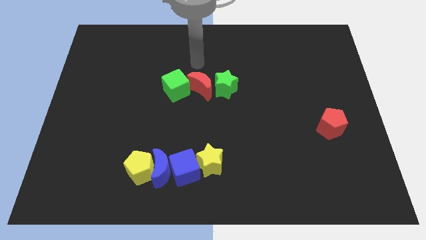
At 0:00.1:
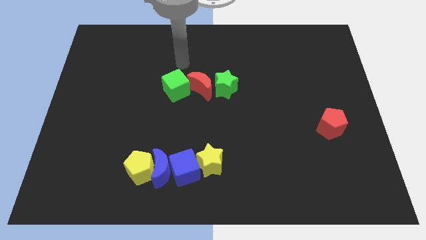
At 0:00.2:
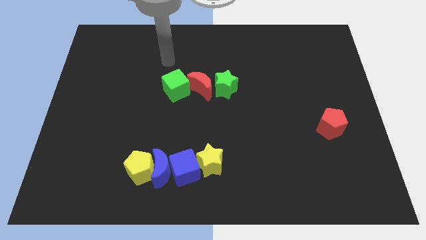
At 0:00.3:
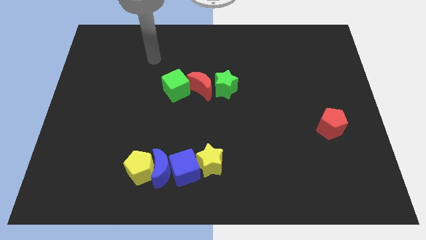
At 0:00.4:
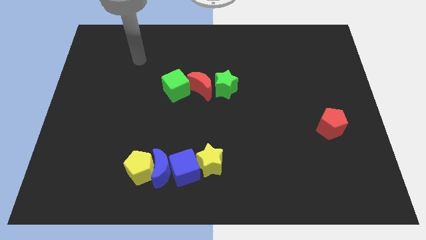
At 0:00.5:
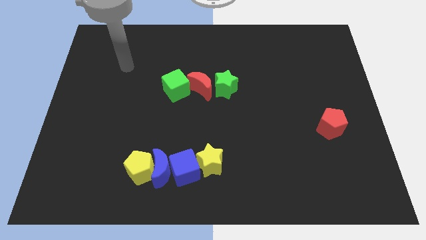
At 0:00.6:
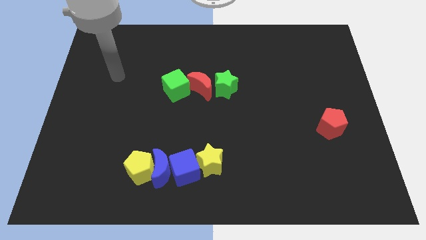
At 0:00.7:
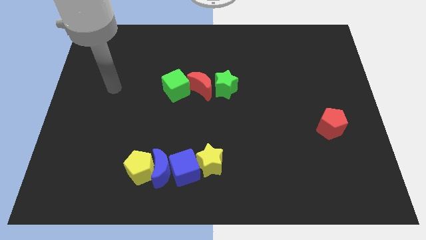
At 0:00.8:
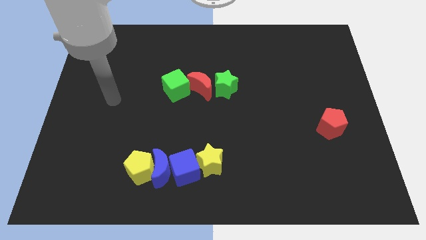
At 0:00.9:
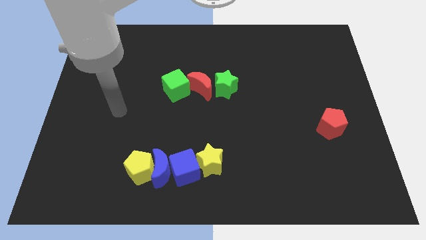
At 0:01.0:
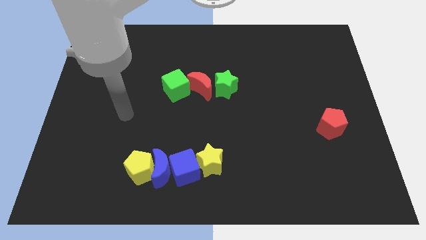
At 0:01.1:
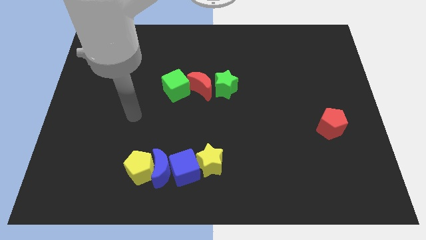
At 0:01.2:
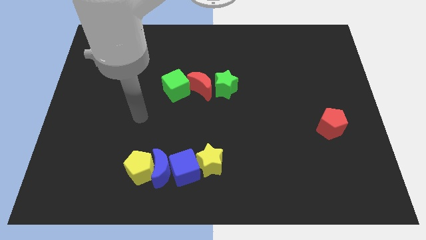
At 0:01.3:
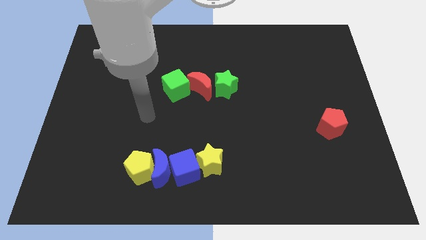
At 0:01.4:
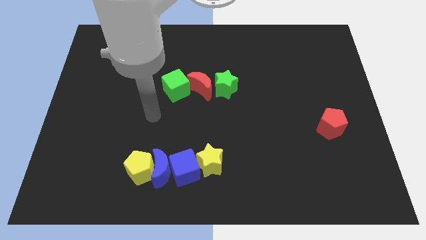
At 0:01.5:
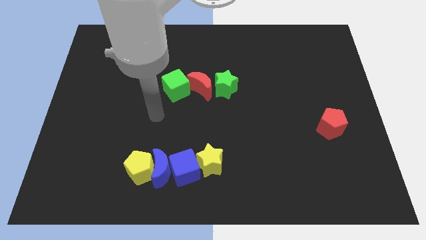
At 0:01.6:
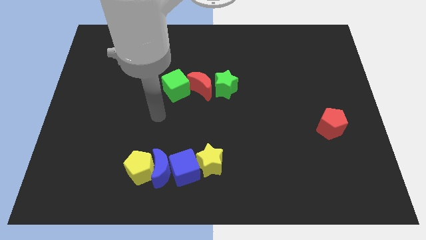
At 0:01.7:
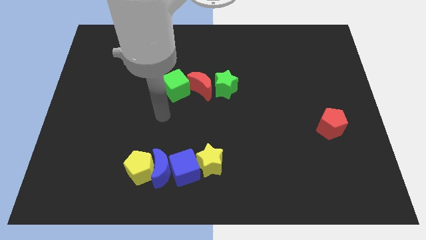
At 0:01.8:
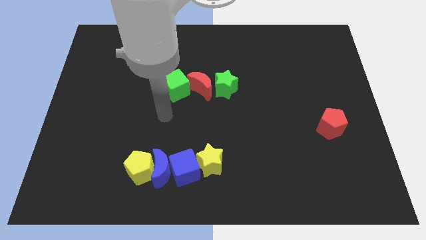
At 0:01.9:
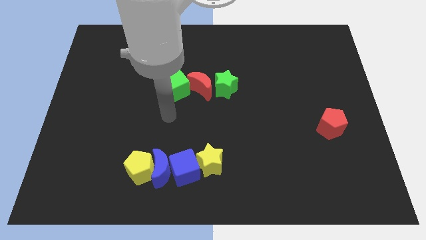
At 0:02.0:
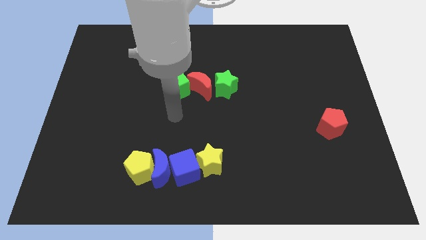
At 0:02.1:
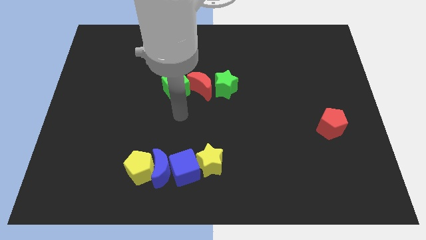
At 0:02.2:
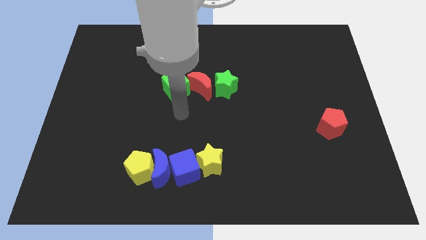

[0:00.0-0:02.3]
point your hand below the green cube

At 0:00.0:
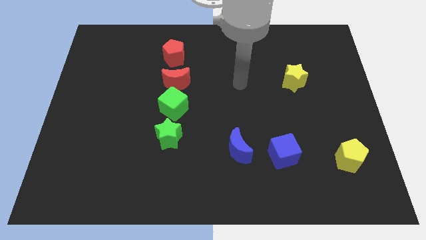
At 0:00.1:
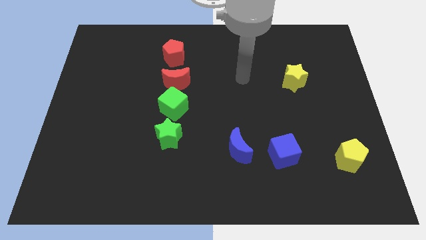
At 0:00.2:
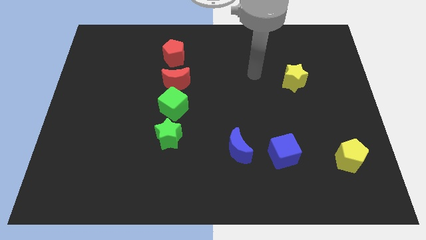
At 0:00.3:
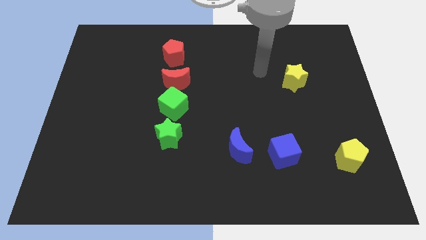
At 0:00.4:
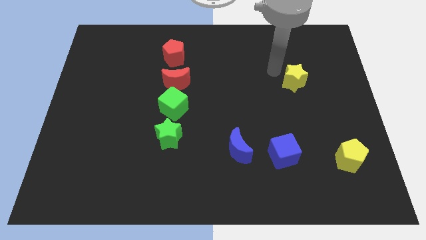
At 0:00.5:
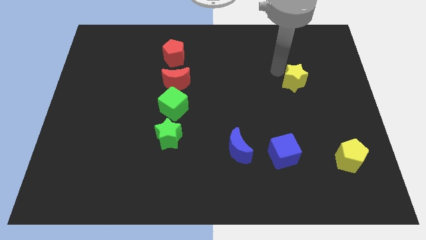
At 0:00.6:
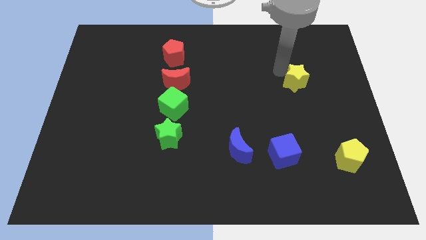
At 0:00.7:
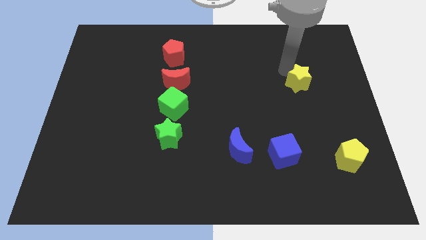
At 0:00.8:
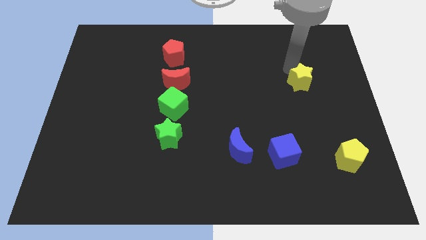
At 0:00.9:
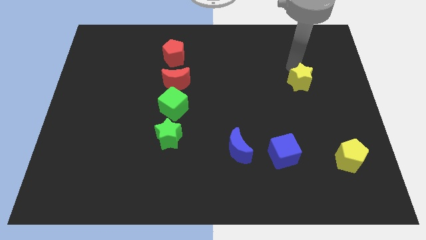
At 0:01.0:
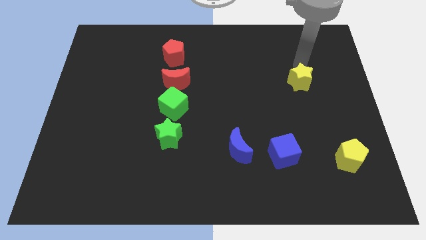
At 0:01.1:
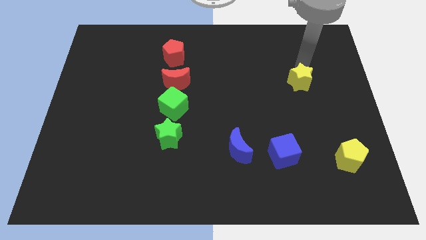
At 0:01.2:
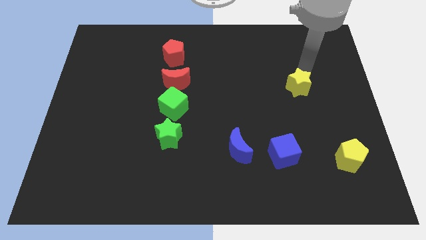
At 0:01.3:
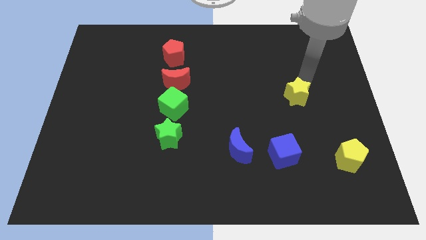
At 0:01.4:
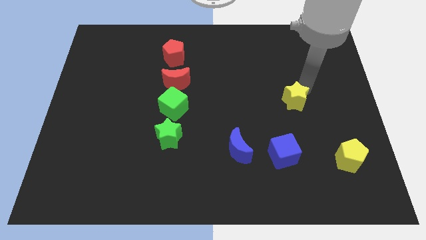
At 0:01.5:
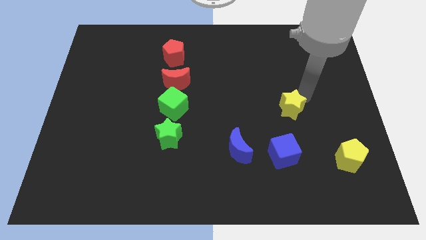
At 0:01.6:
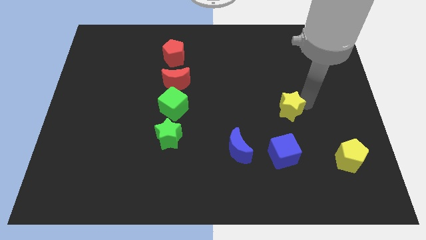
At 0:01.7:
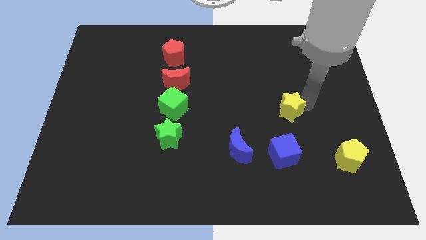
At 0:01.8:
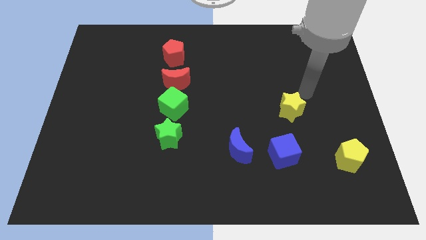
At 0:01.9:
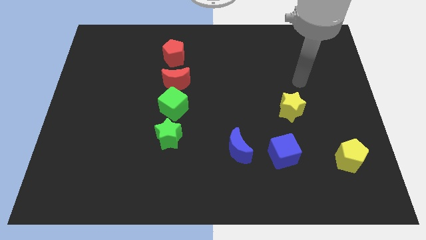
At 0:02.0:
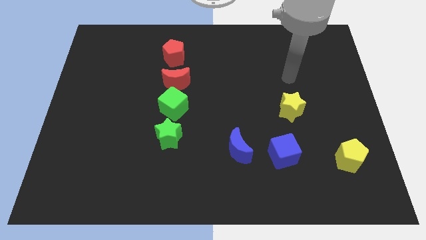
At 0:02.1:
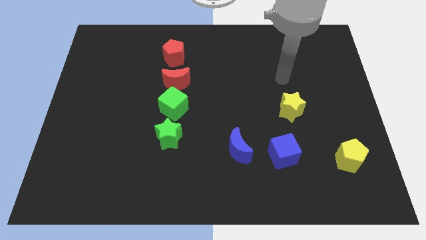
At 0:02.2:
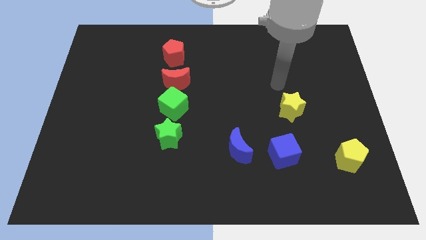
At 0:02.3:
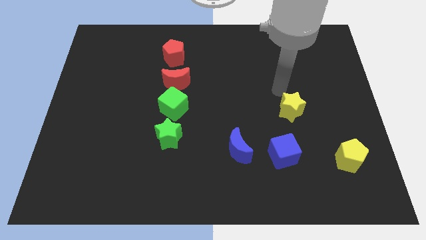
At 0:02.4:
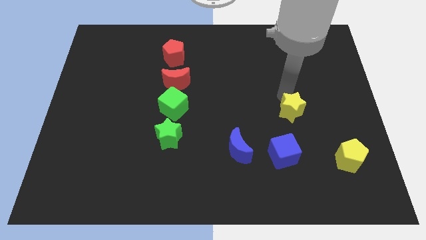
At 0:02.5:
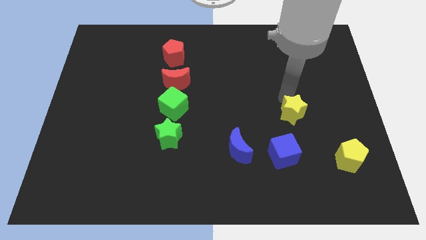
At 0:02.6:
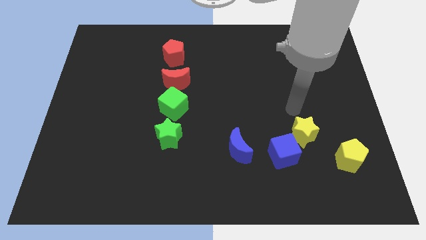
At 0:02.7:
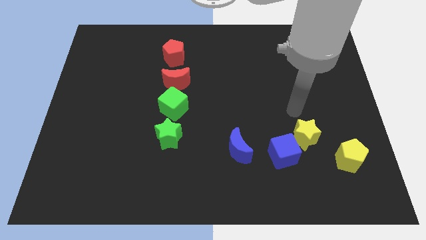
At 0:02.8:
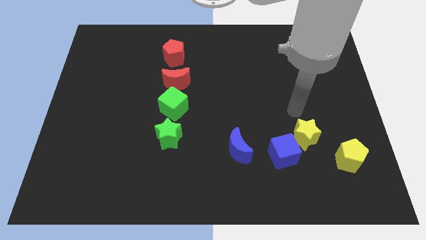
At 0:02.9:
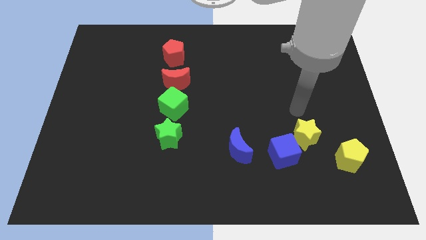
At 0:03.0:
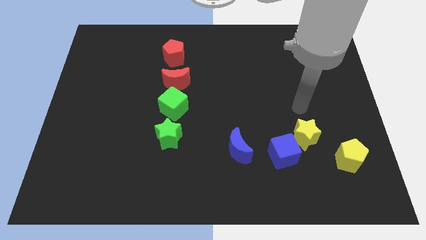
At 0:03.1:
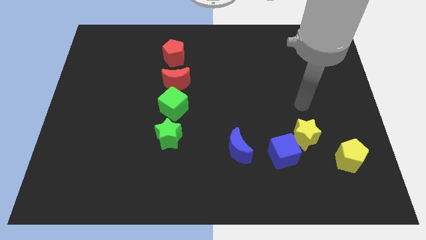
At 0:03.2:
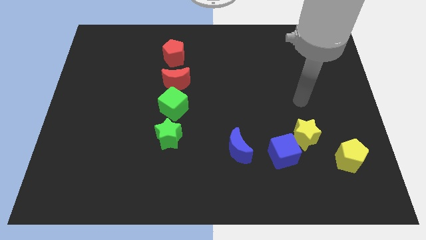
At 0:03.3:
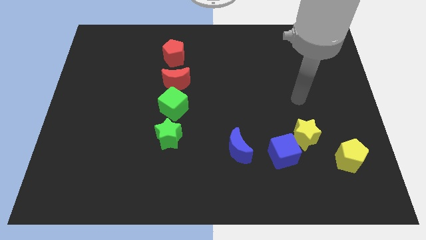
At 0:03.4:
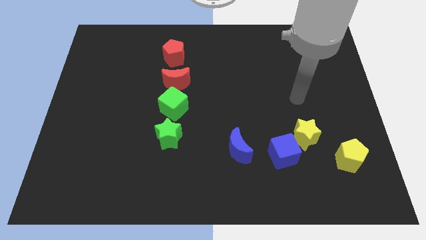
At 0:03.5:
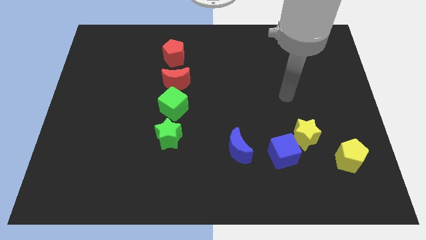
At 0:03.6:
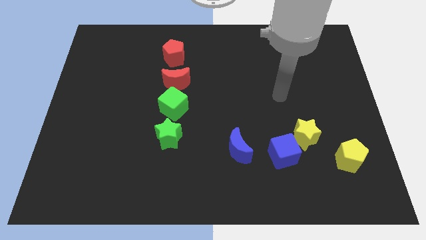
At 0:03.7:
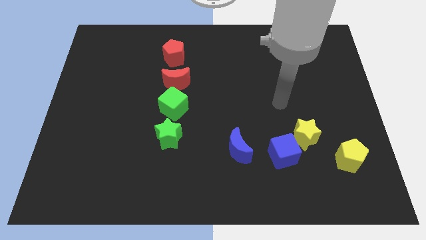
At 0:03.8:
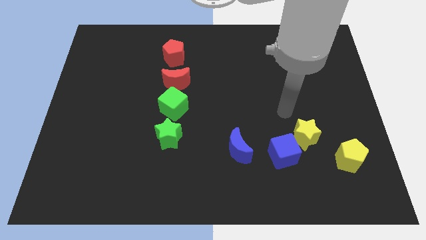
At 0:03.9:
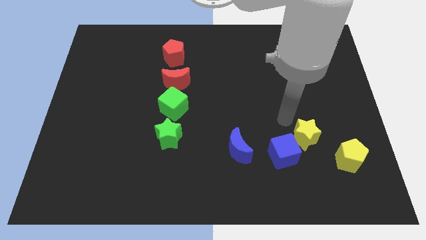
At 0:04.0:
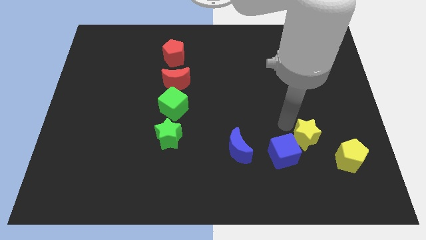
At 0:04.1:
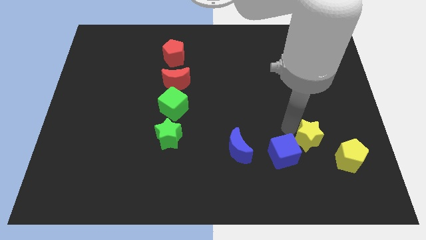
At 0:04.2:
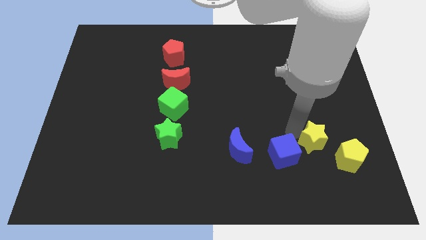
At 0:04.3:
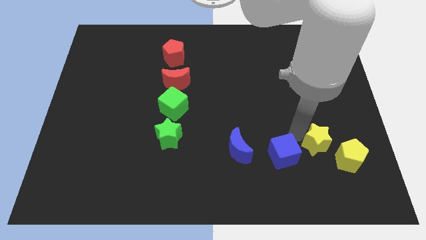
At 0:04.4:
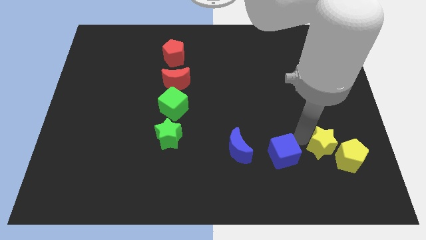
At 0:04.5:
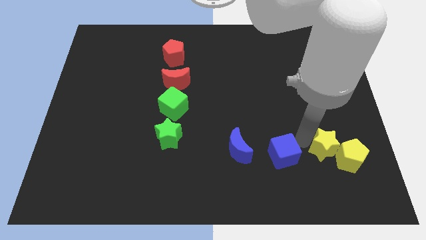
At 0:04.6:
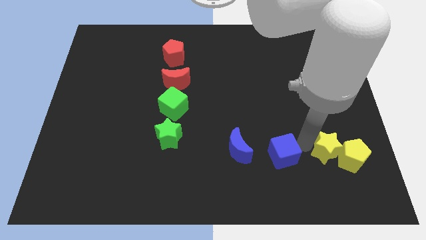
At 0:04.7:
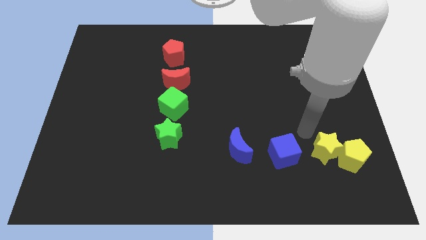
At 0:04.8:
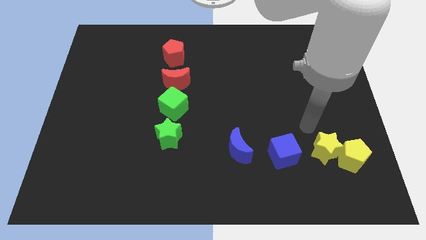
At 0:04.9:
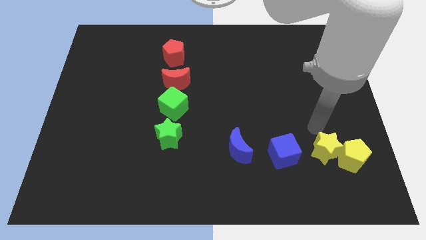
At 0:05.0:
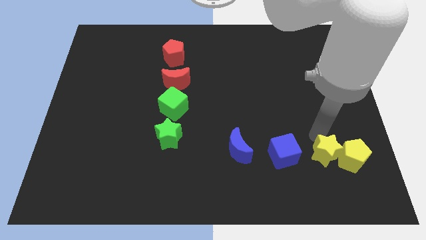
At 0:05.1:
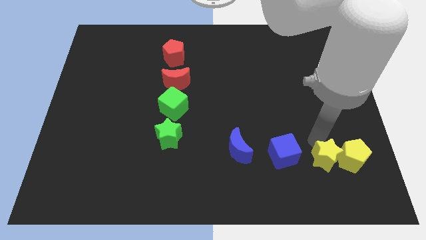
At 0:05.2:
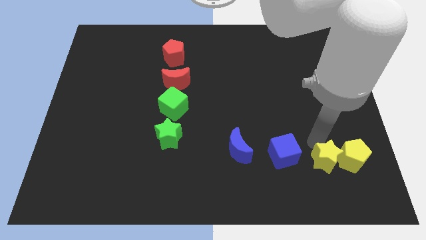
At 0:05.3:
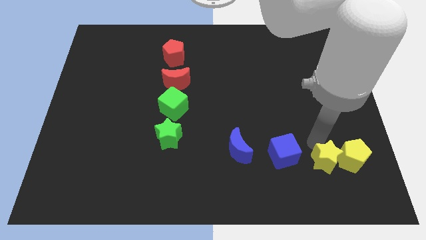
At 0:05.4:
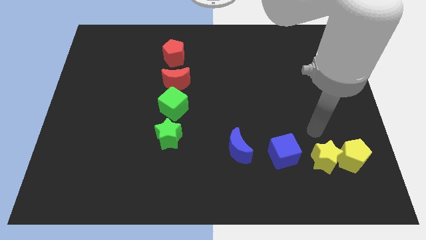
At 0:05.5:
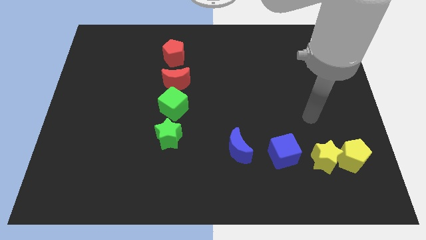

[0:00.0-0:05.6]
push the yellow star into the yellow pentagon

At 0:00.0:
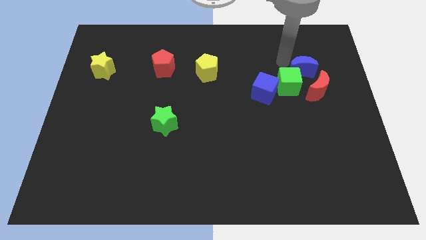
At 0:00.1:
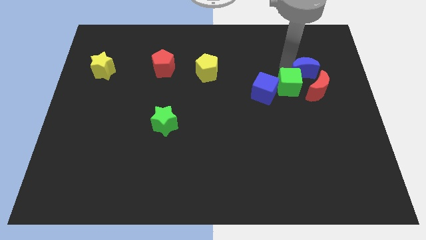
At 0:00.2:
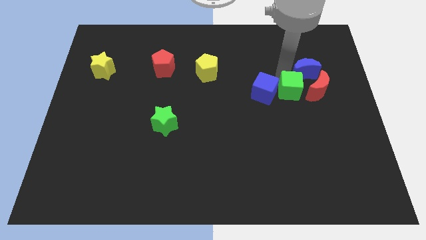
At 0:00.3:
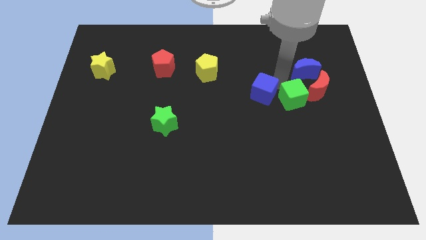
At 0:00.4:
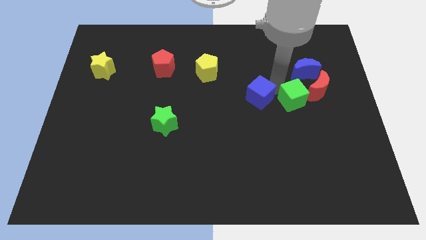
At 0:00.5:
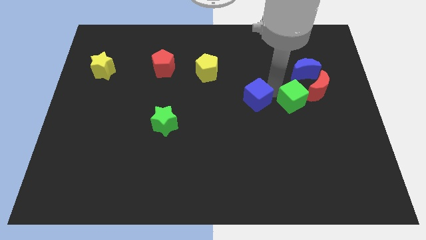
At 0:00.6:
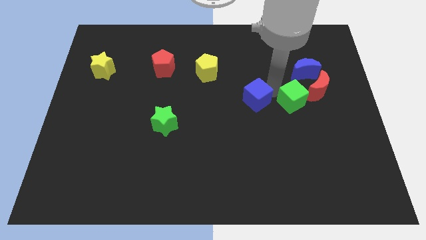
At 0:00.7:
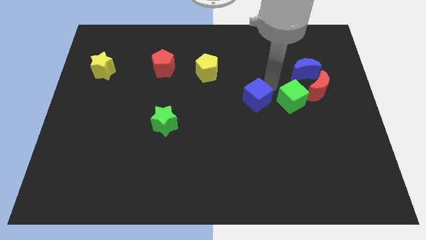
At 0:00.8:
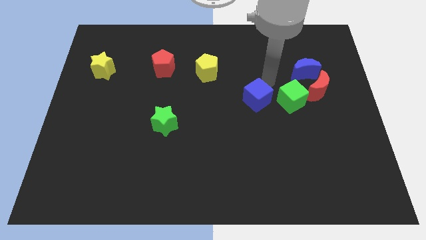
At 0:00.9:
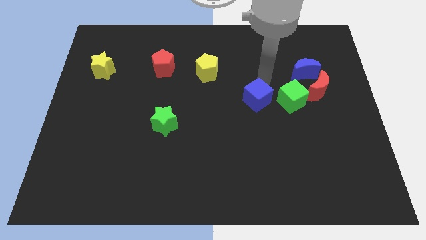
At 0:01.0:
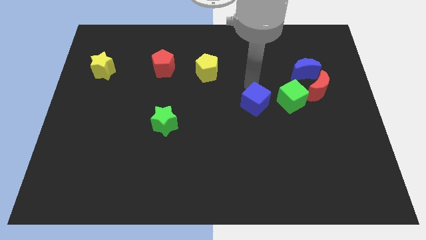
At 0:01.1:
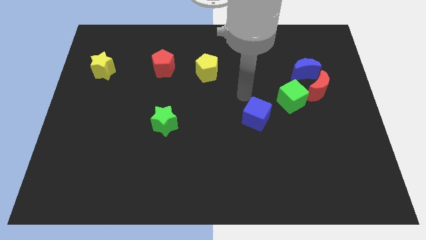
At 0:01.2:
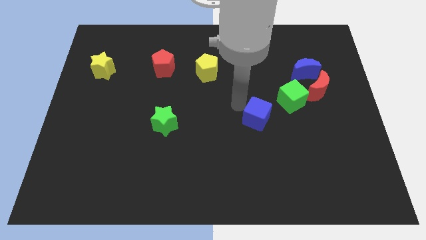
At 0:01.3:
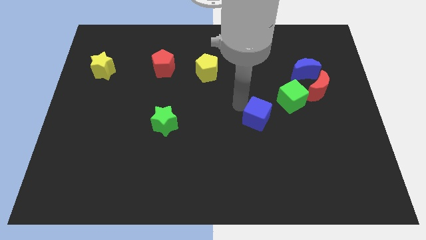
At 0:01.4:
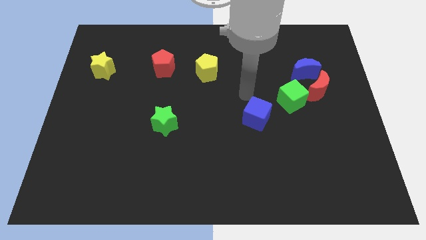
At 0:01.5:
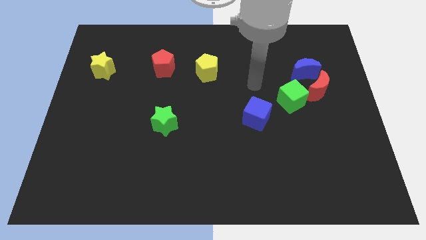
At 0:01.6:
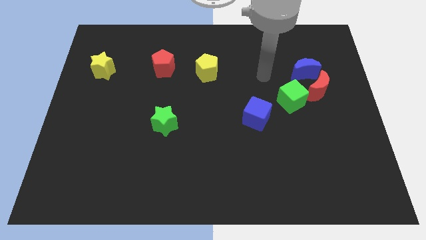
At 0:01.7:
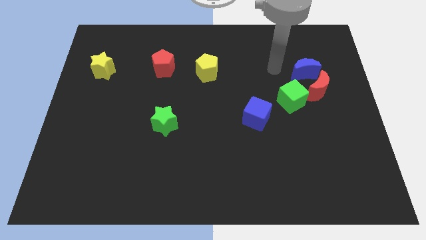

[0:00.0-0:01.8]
push the blue cube downwards slightly
